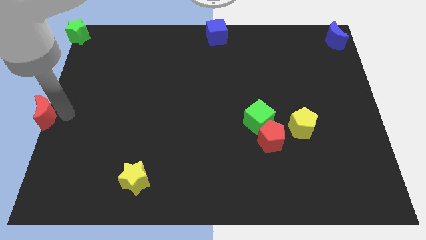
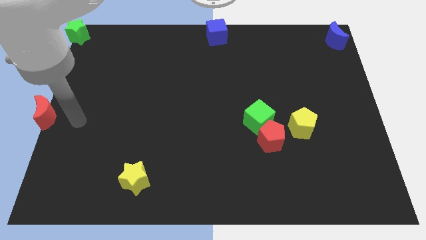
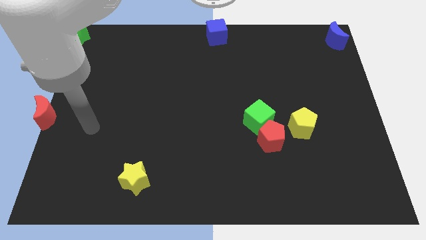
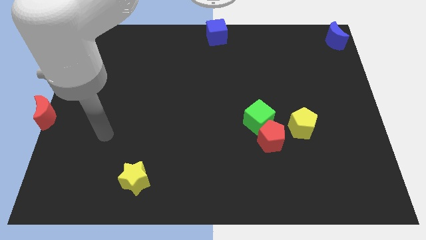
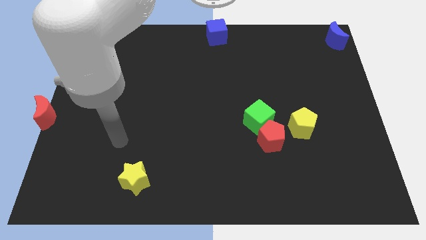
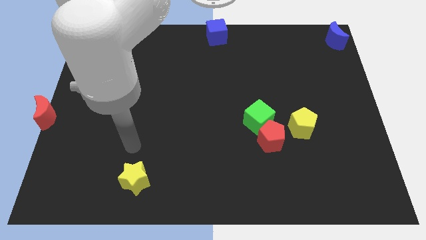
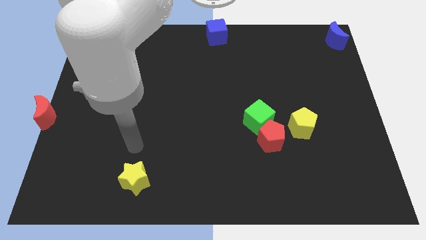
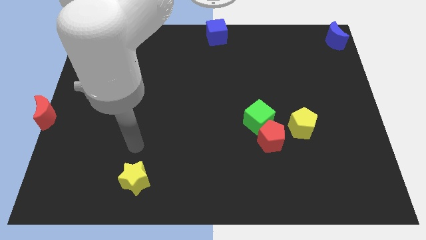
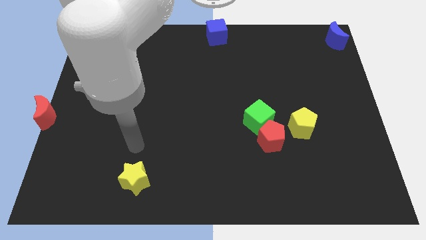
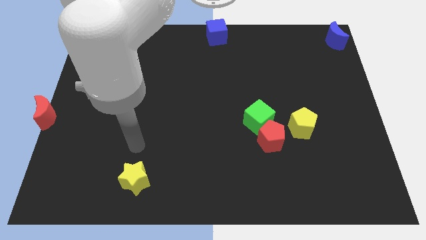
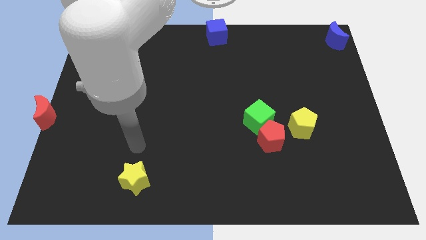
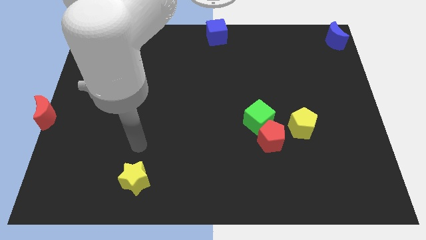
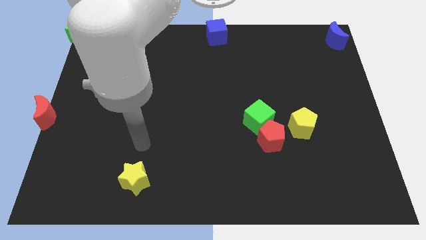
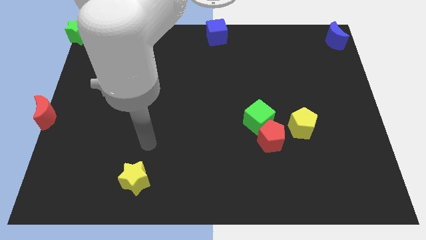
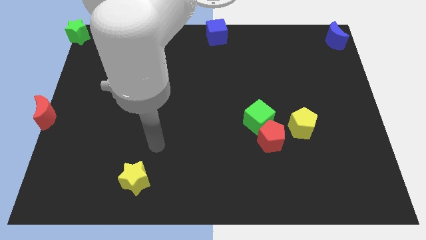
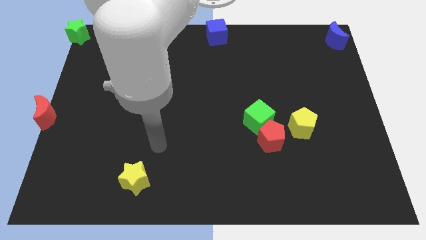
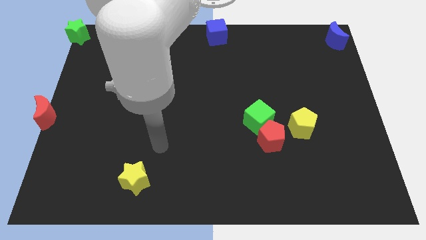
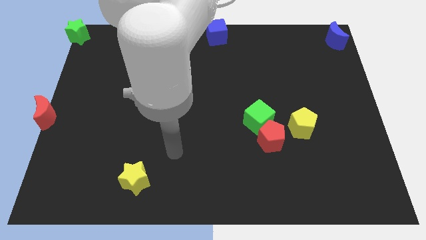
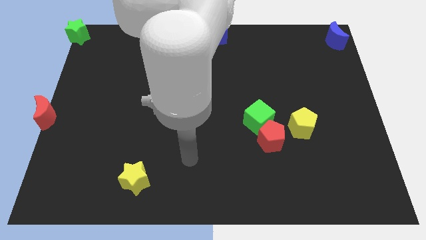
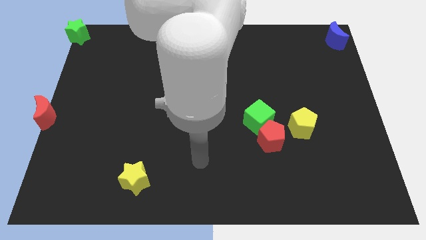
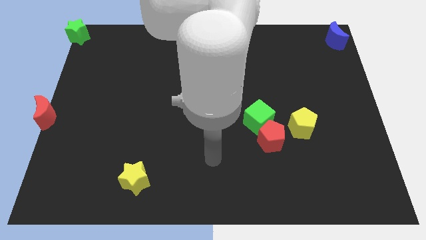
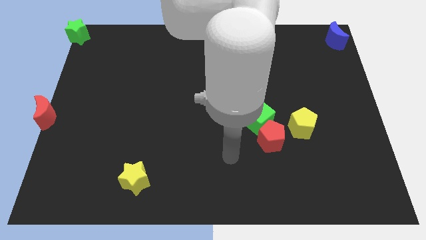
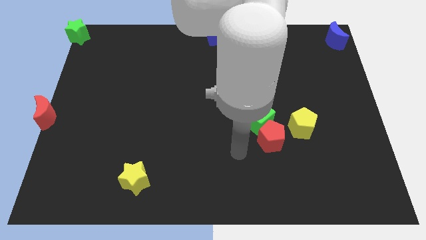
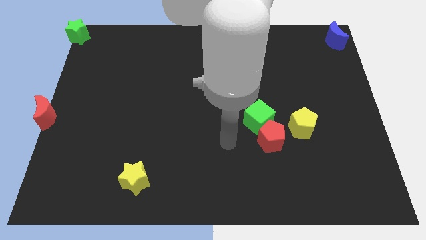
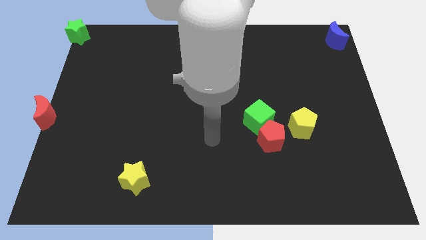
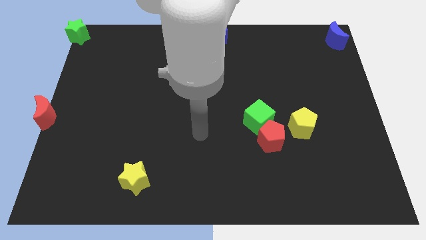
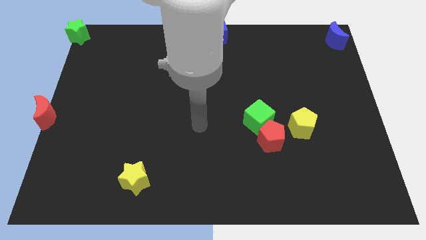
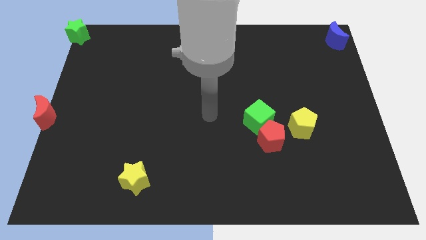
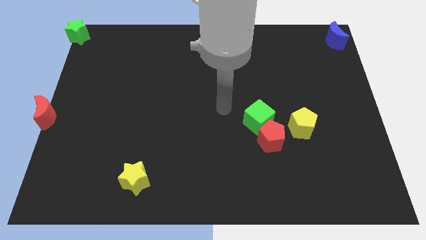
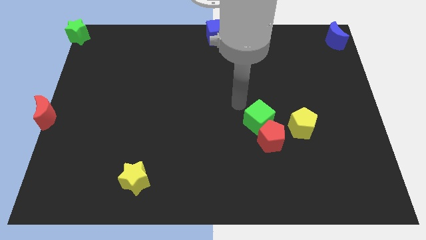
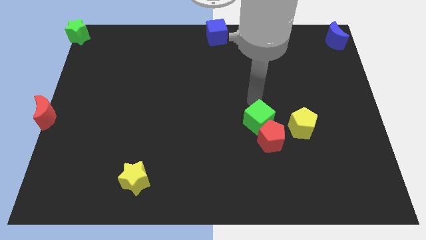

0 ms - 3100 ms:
move your arm away from the red moon

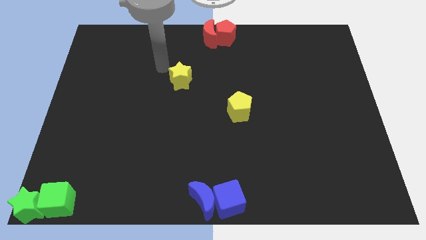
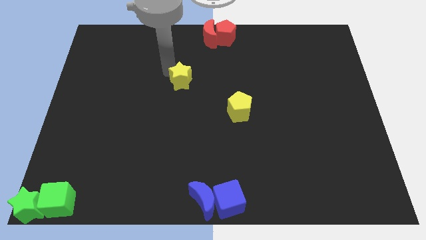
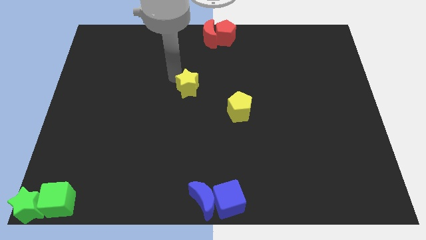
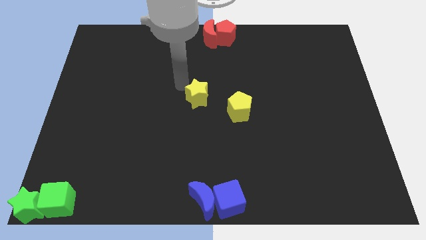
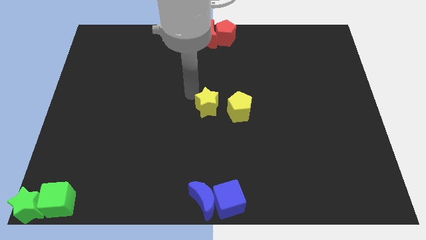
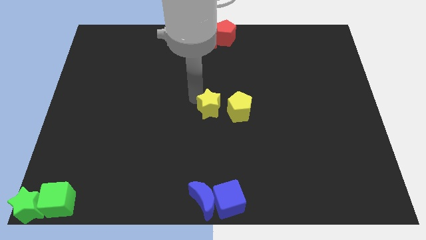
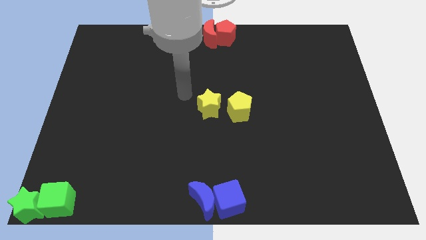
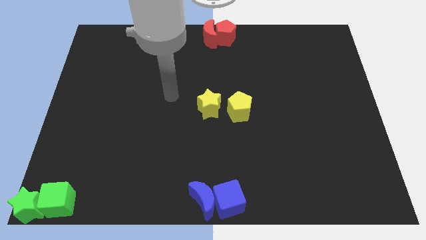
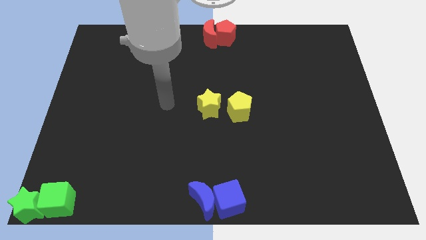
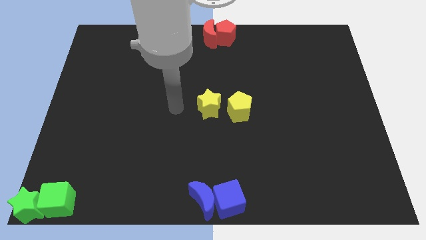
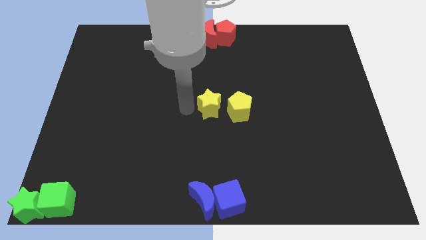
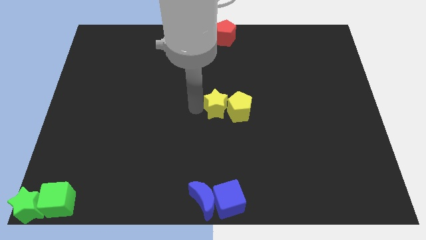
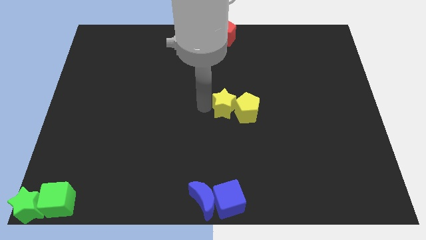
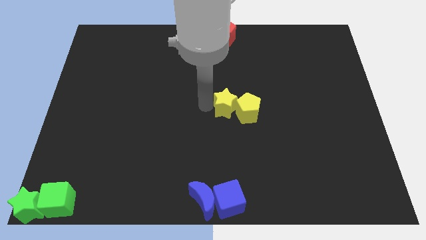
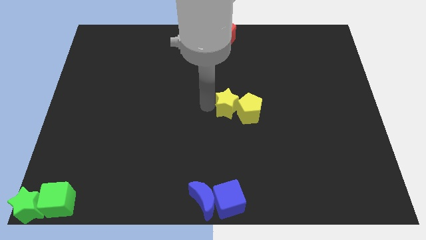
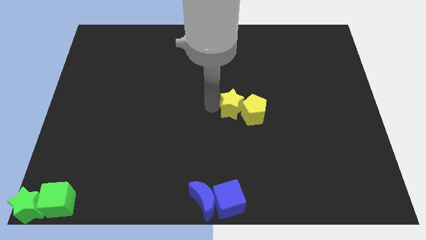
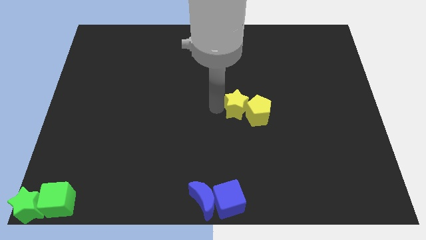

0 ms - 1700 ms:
place yellow star close to the yellow pentagon

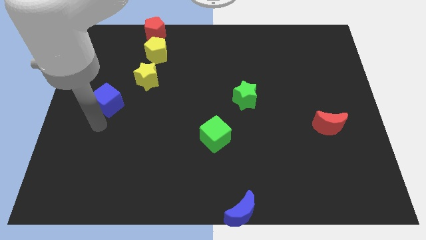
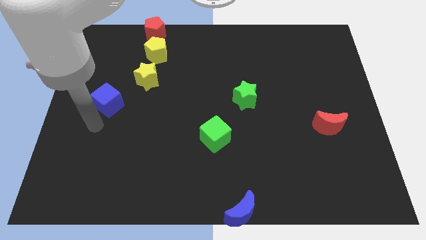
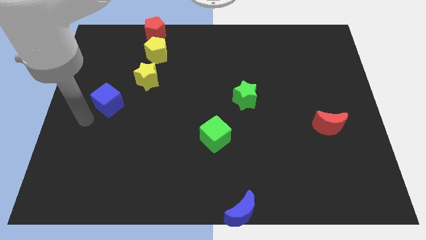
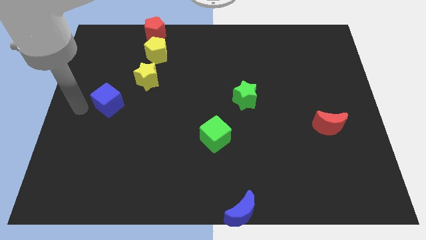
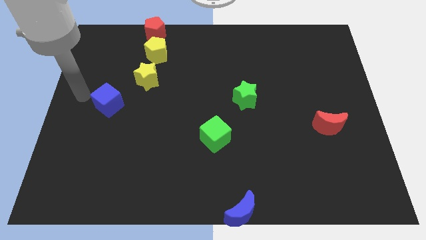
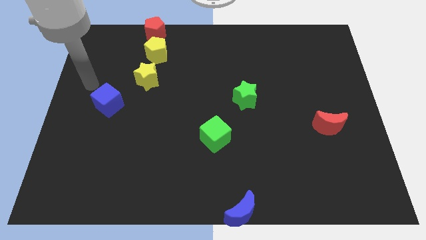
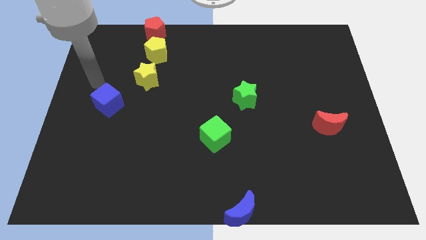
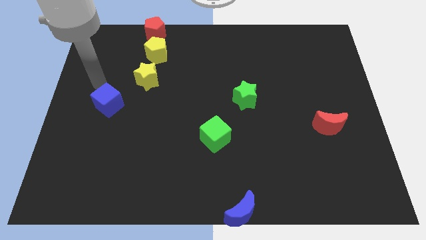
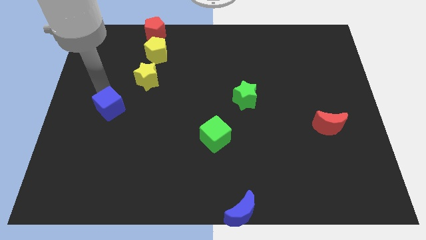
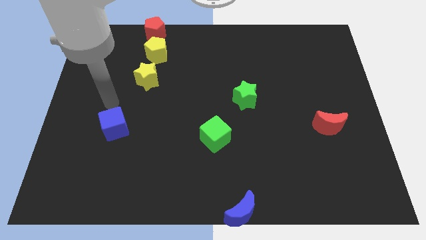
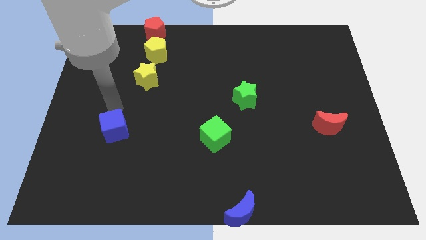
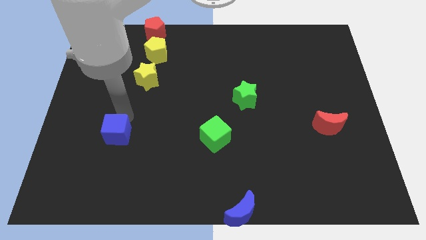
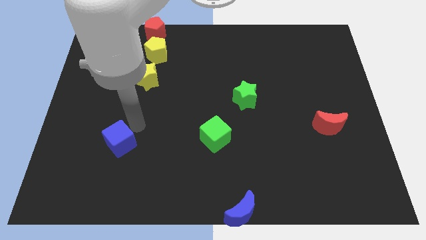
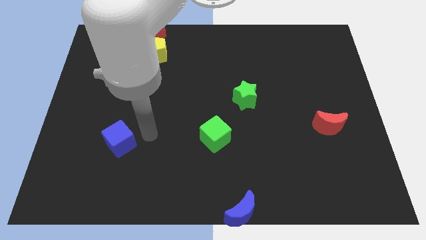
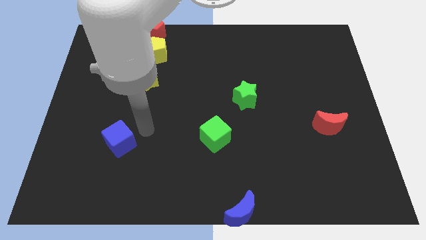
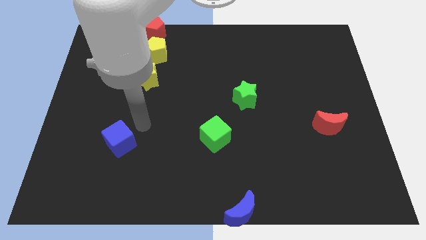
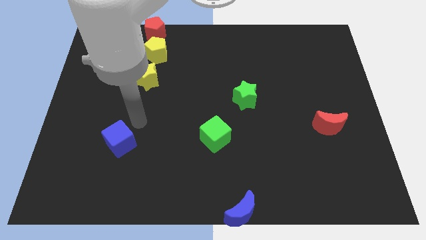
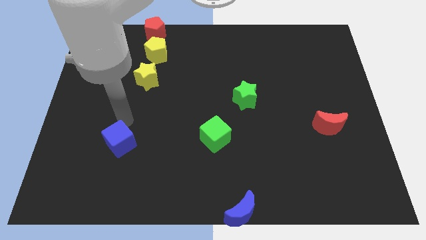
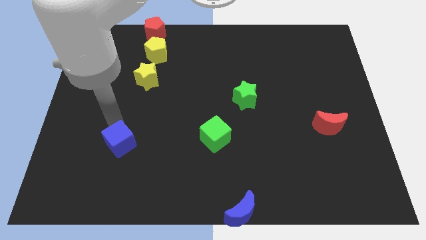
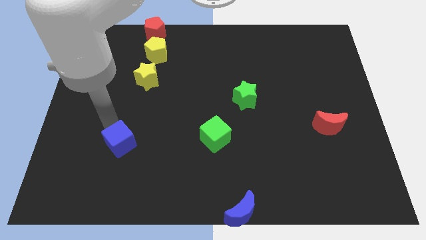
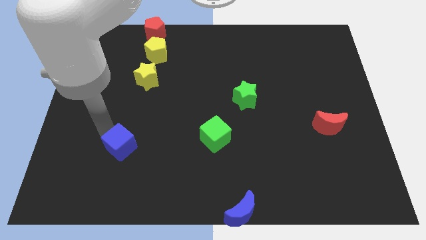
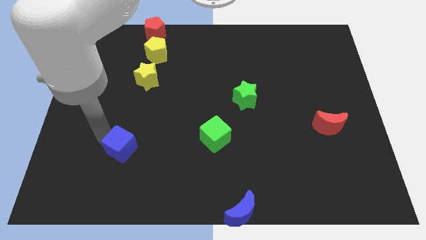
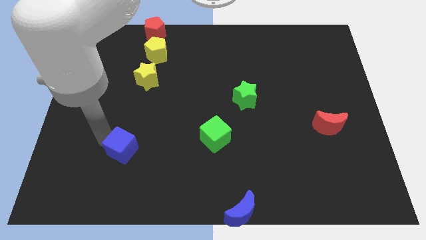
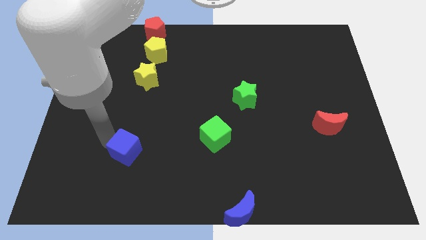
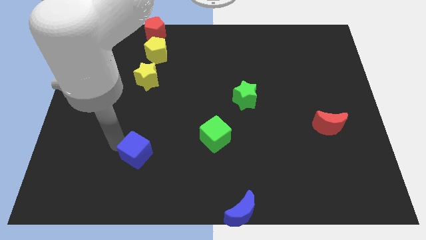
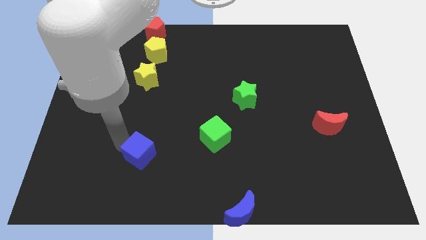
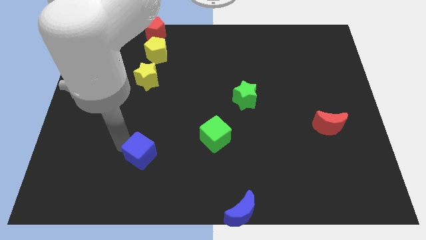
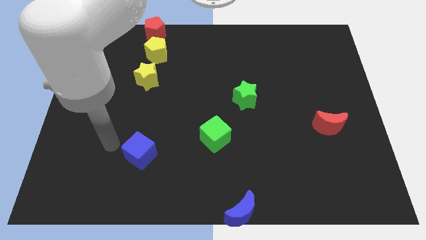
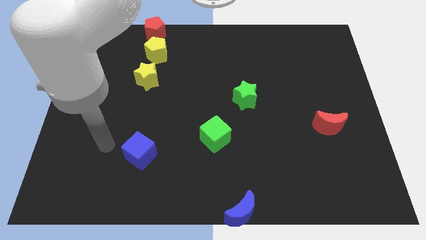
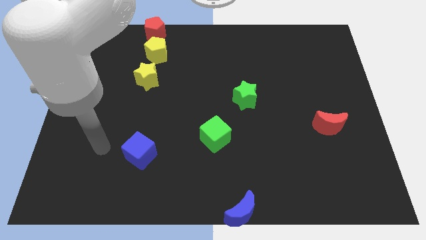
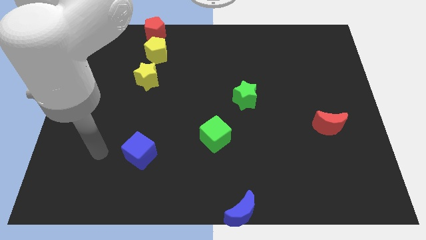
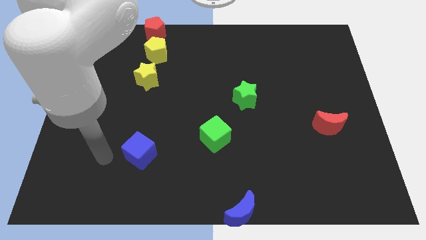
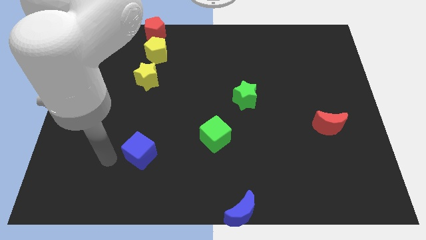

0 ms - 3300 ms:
move the blue cube to the left of the green cube

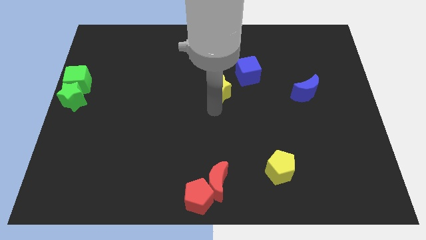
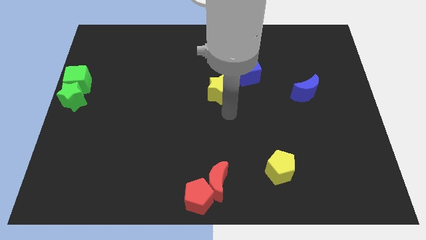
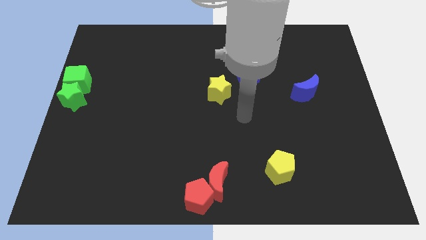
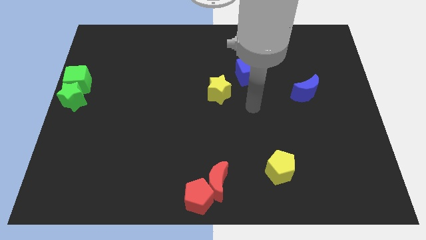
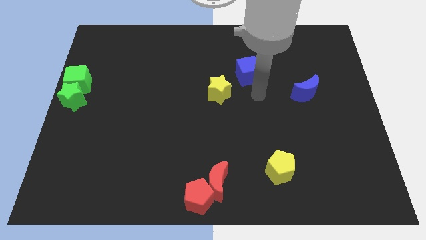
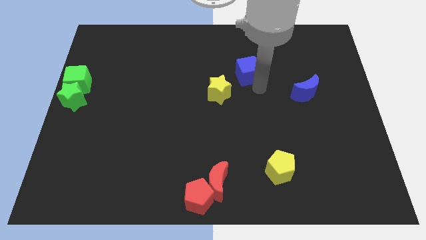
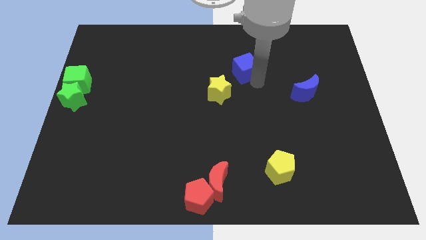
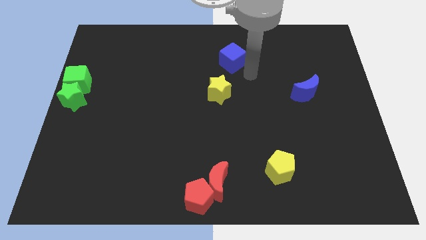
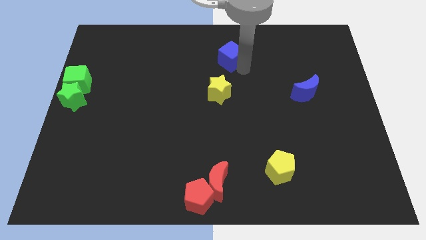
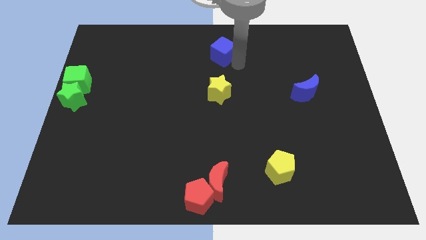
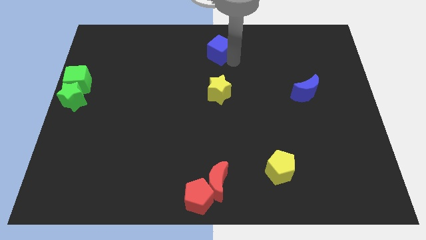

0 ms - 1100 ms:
push blue cube above yellow star
